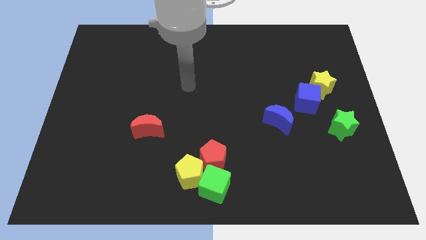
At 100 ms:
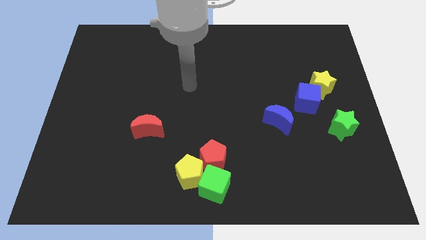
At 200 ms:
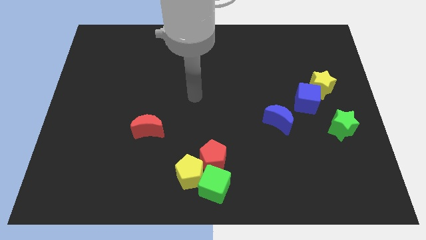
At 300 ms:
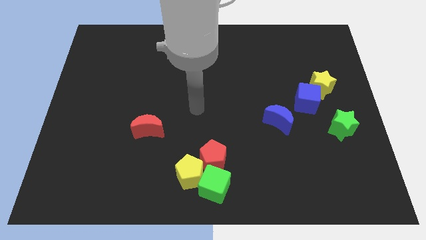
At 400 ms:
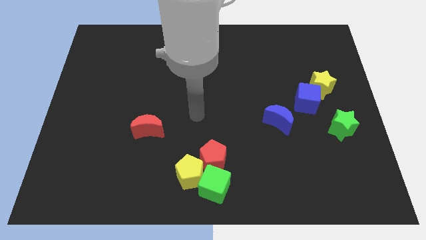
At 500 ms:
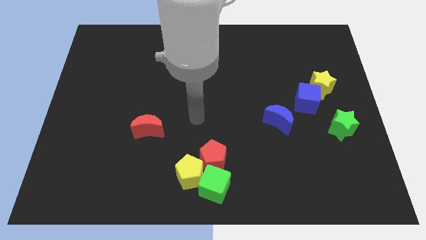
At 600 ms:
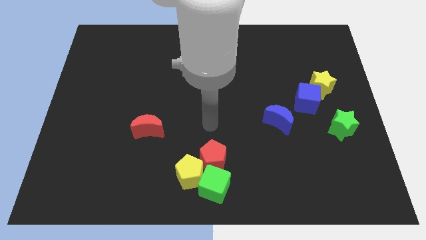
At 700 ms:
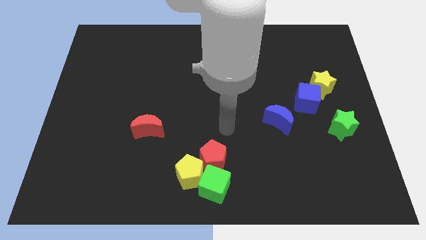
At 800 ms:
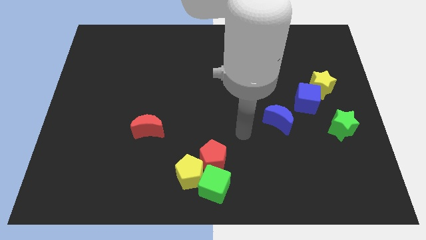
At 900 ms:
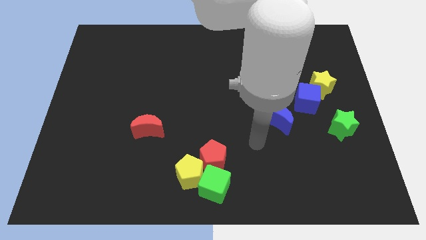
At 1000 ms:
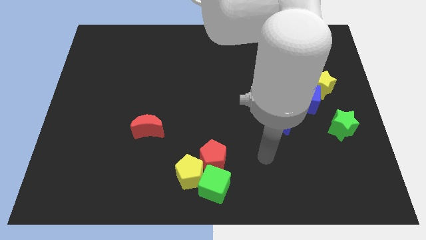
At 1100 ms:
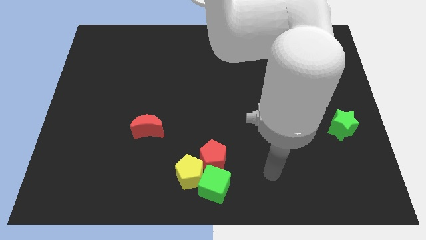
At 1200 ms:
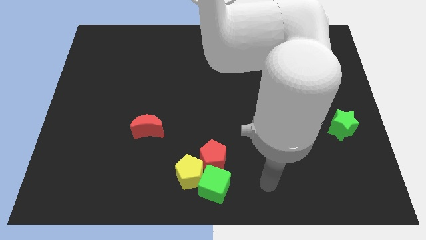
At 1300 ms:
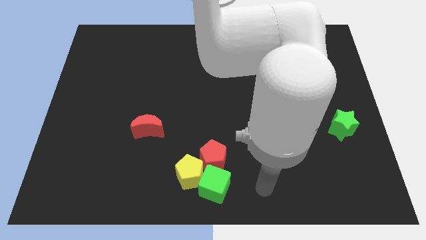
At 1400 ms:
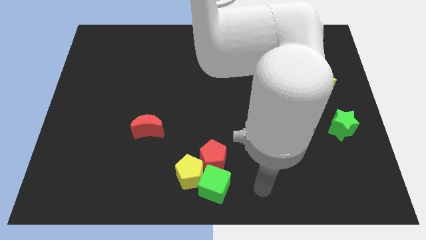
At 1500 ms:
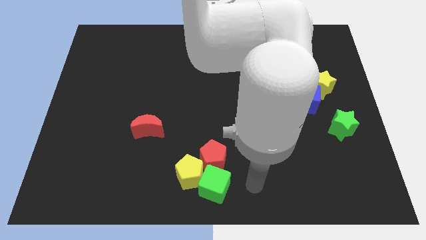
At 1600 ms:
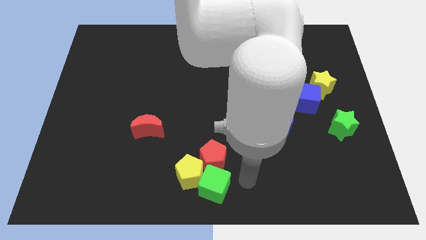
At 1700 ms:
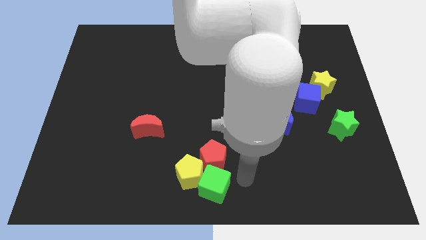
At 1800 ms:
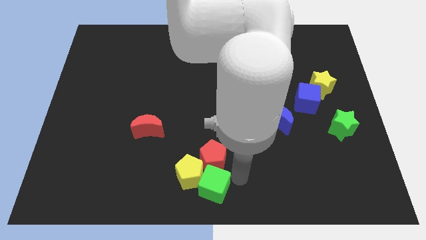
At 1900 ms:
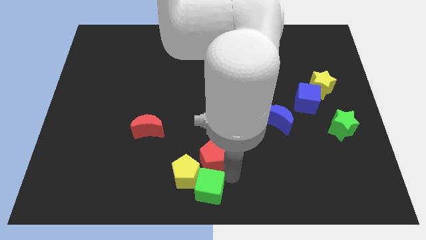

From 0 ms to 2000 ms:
tap the green cube

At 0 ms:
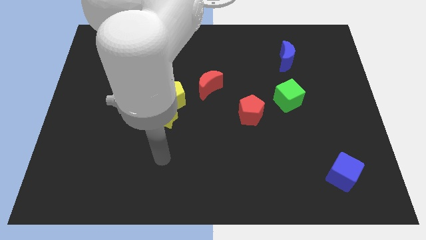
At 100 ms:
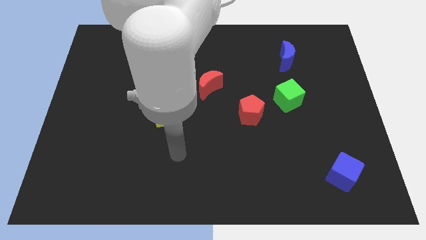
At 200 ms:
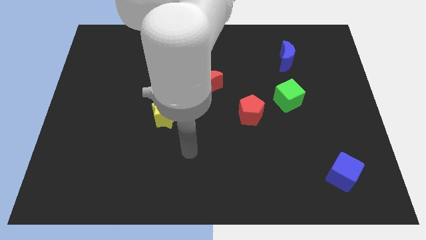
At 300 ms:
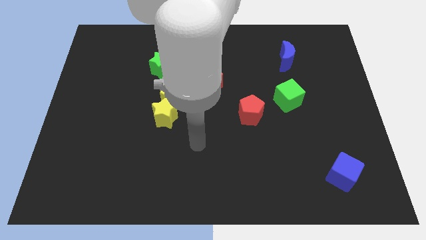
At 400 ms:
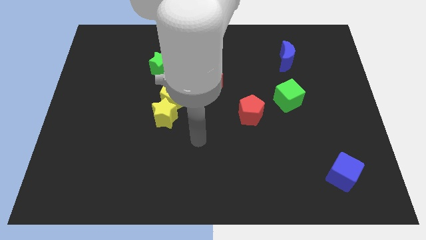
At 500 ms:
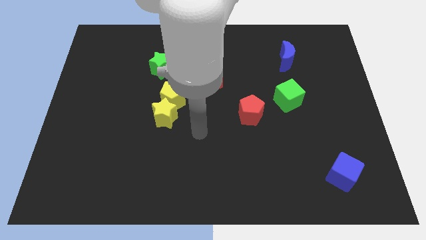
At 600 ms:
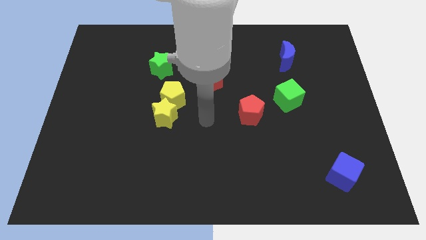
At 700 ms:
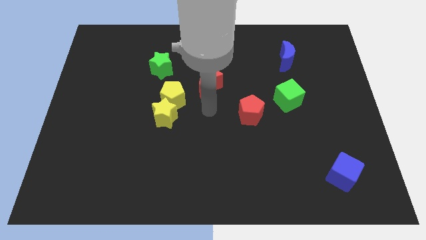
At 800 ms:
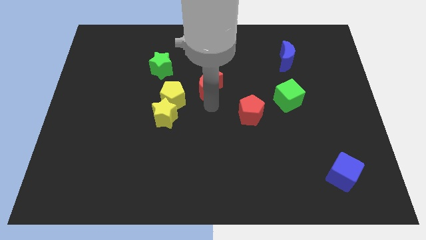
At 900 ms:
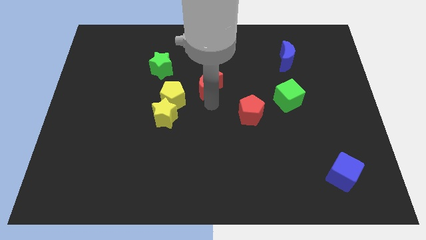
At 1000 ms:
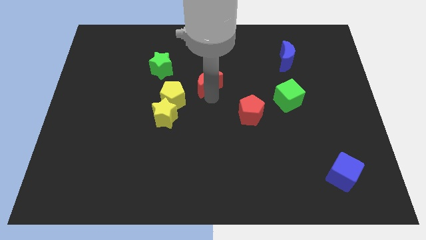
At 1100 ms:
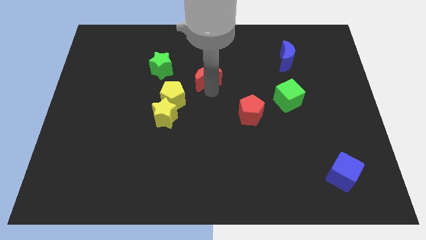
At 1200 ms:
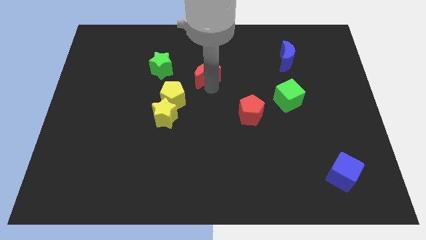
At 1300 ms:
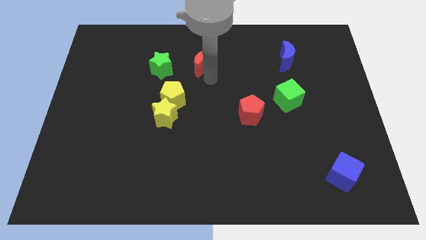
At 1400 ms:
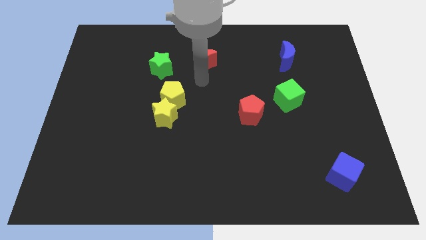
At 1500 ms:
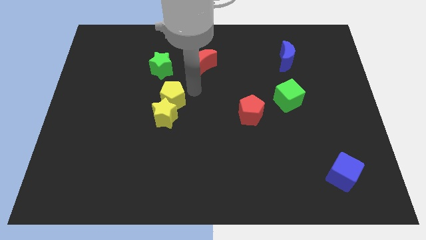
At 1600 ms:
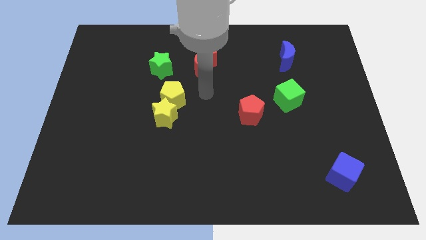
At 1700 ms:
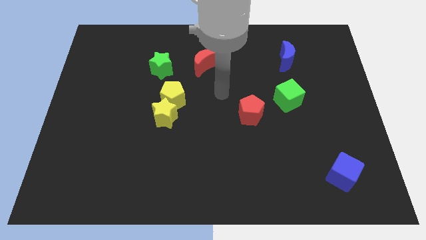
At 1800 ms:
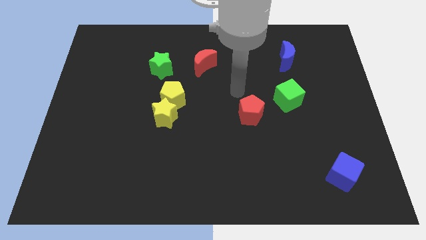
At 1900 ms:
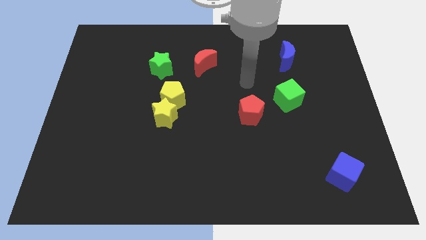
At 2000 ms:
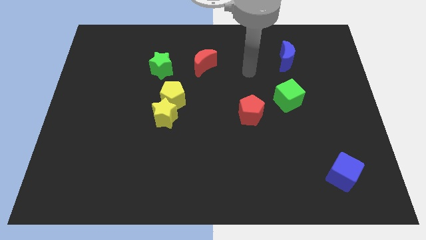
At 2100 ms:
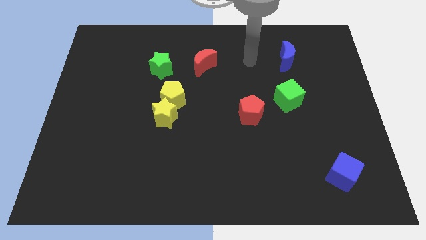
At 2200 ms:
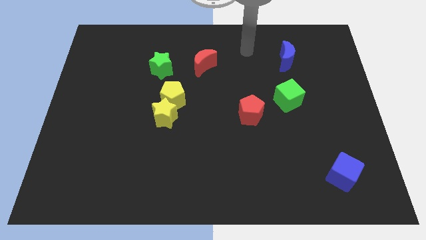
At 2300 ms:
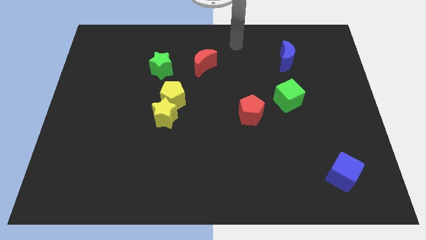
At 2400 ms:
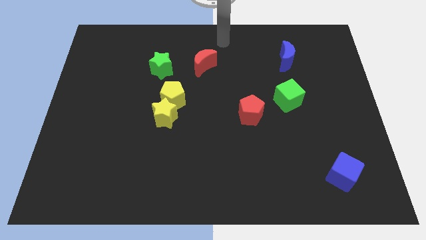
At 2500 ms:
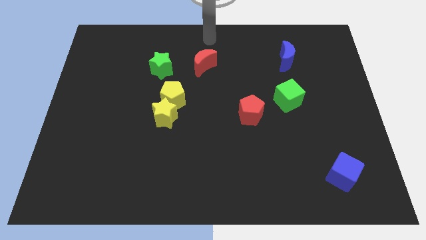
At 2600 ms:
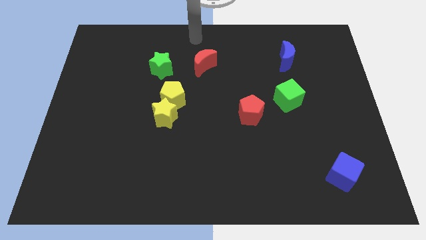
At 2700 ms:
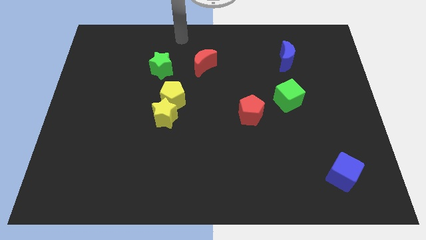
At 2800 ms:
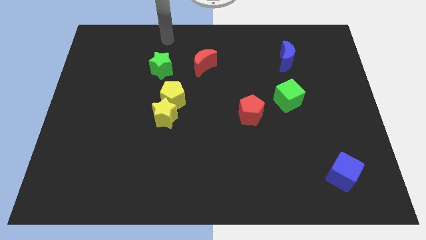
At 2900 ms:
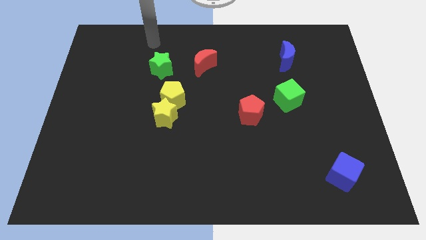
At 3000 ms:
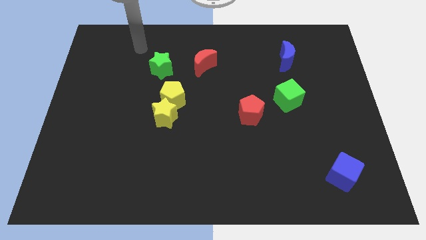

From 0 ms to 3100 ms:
push the red crescent to the right of the green star

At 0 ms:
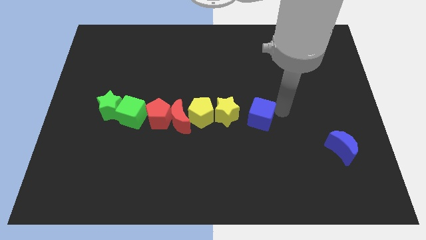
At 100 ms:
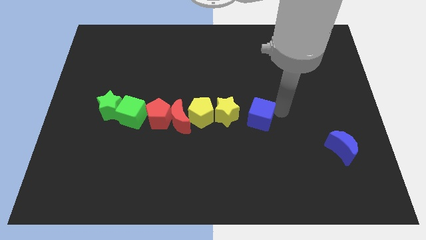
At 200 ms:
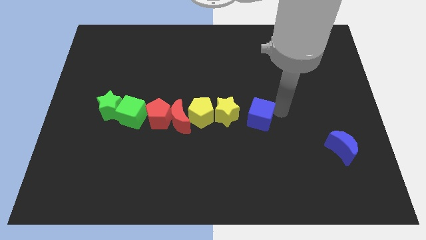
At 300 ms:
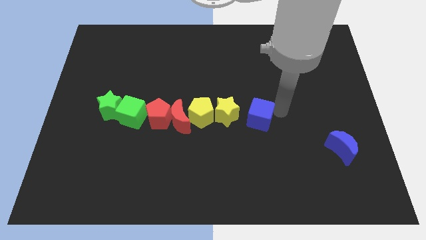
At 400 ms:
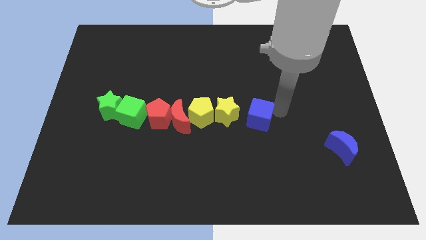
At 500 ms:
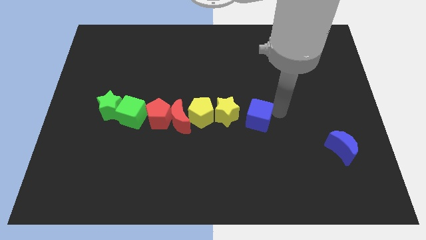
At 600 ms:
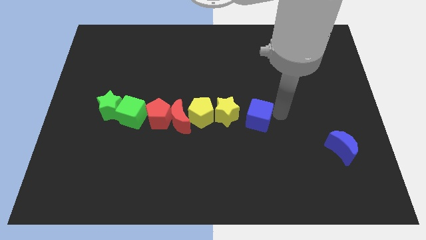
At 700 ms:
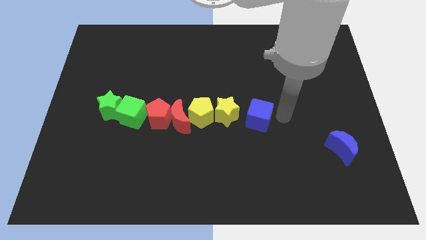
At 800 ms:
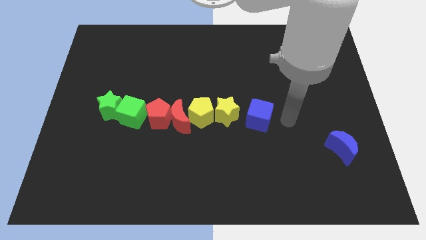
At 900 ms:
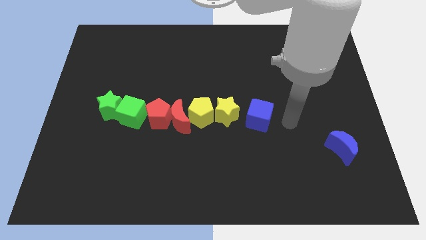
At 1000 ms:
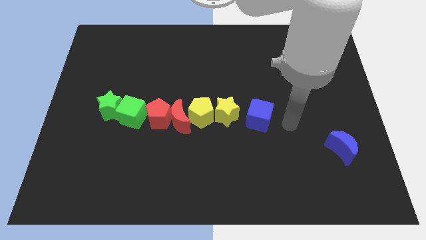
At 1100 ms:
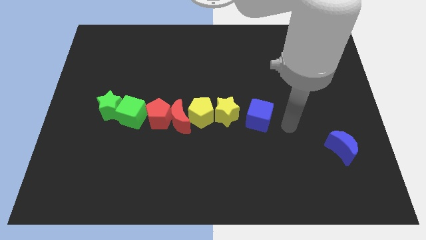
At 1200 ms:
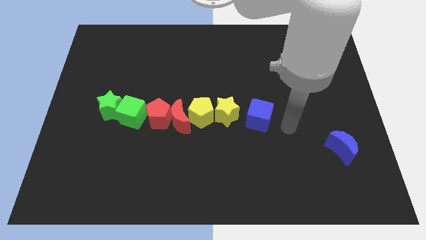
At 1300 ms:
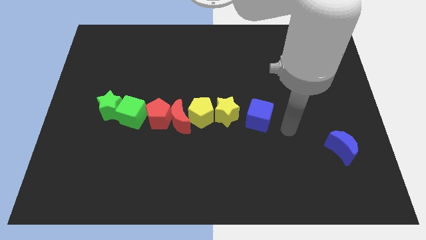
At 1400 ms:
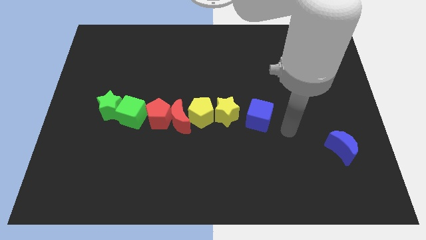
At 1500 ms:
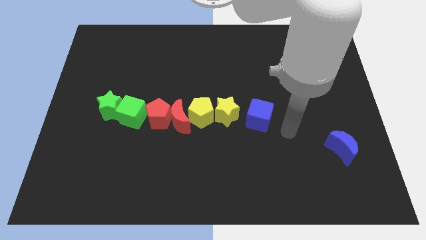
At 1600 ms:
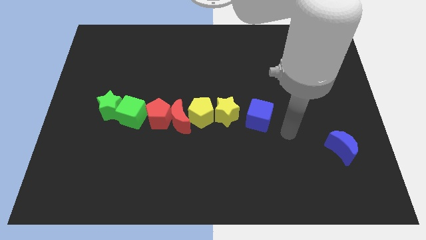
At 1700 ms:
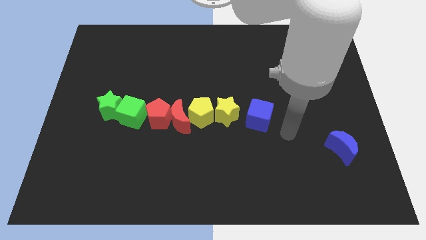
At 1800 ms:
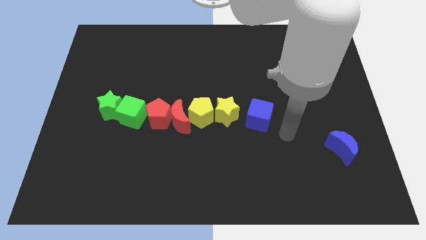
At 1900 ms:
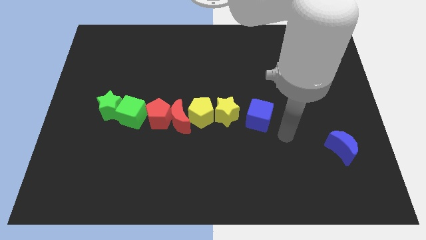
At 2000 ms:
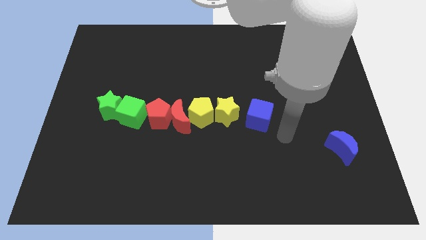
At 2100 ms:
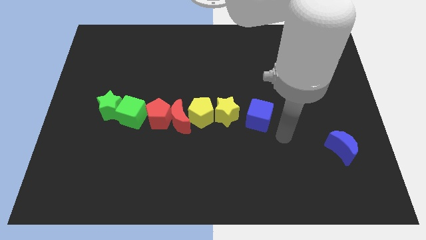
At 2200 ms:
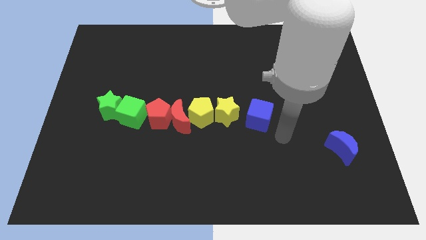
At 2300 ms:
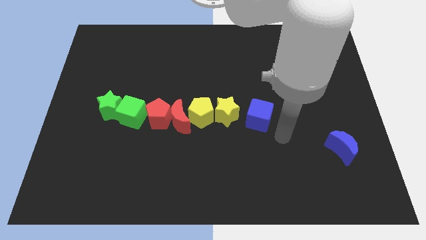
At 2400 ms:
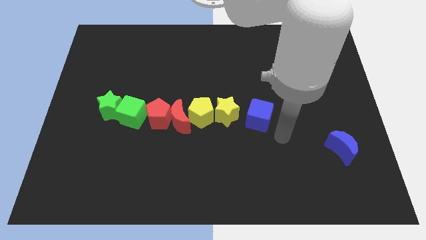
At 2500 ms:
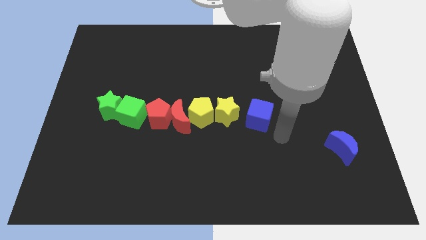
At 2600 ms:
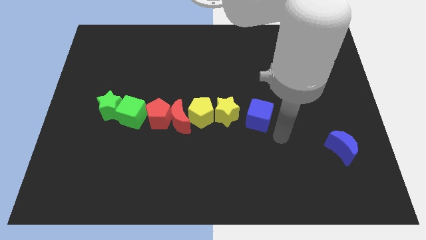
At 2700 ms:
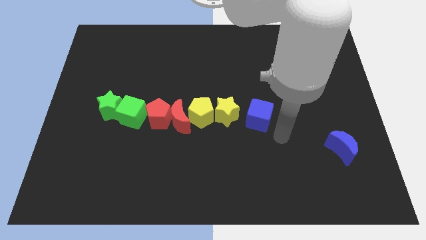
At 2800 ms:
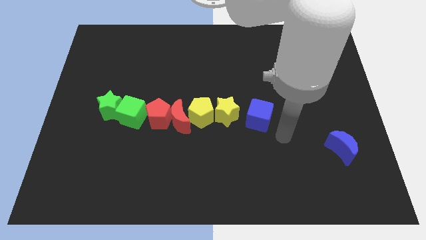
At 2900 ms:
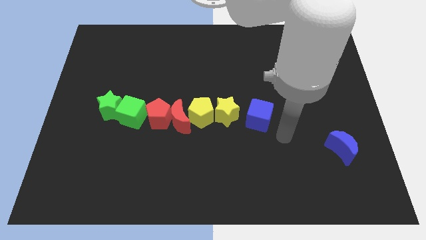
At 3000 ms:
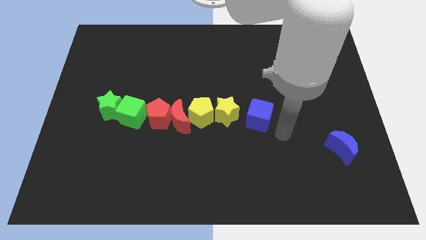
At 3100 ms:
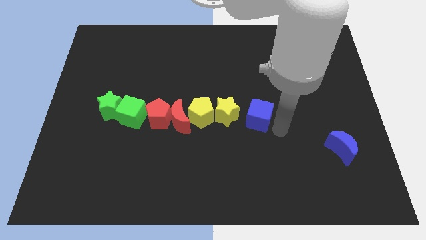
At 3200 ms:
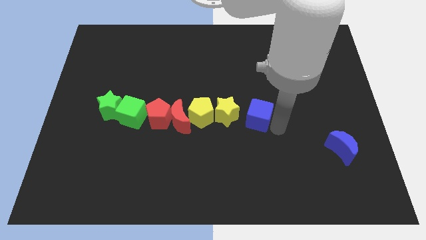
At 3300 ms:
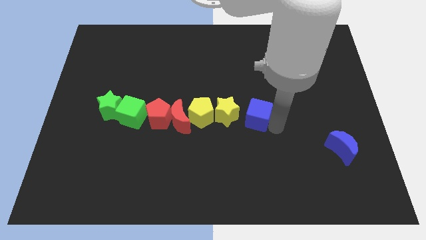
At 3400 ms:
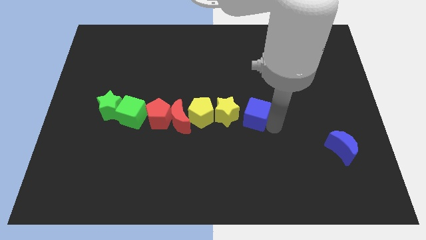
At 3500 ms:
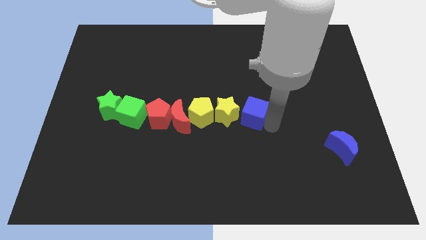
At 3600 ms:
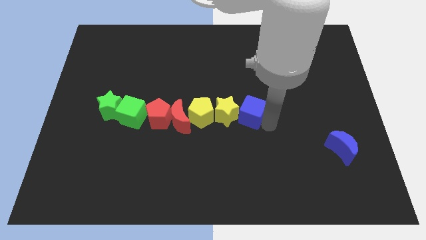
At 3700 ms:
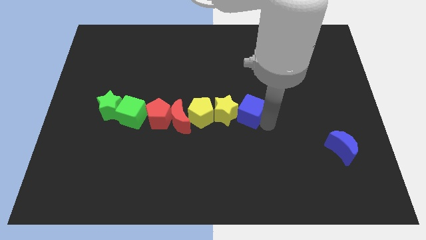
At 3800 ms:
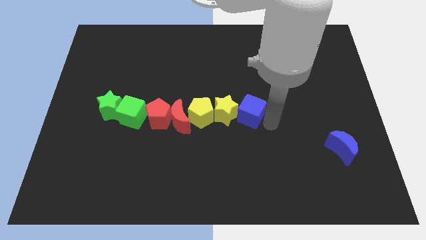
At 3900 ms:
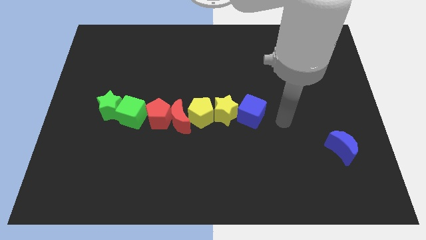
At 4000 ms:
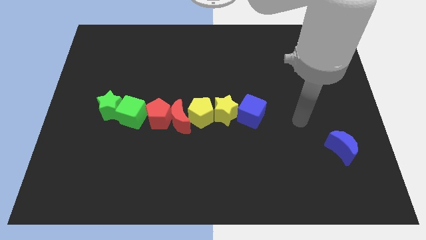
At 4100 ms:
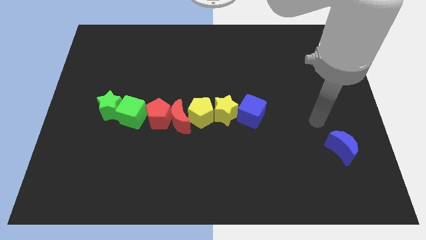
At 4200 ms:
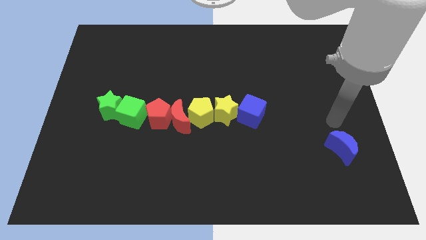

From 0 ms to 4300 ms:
push the blue cube to the yellow star
